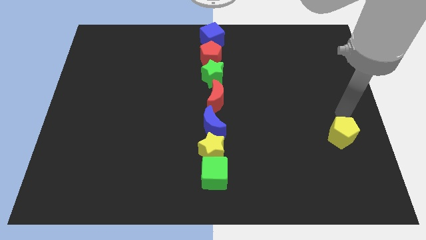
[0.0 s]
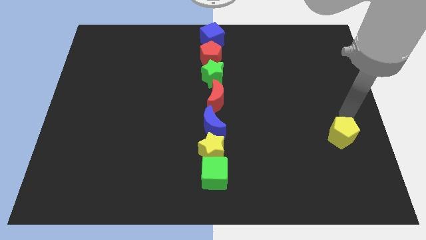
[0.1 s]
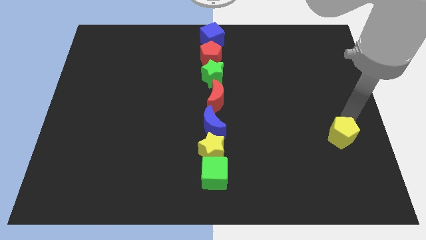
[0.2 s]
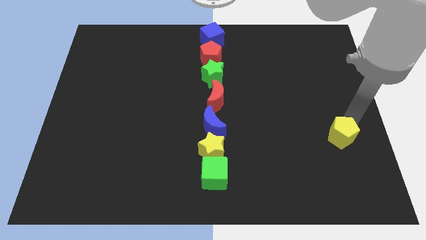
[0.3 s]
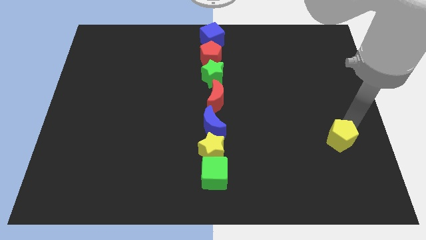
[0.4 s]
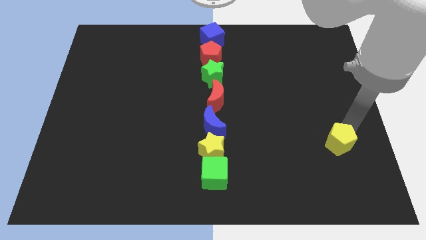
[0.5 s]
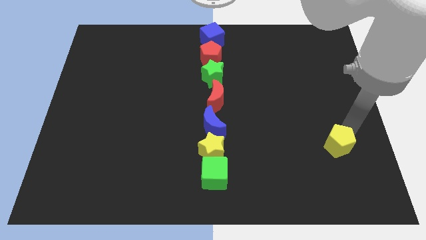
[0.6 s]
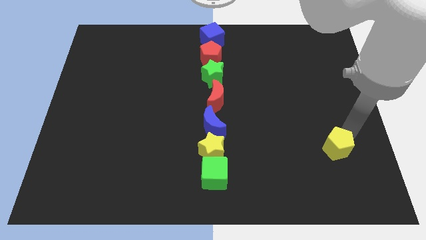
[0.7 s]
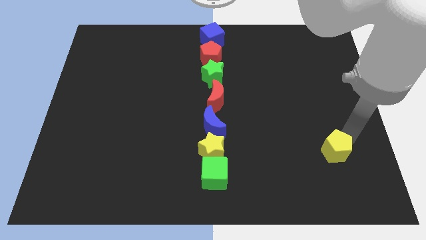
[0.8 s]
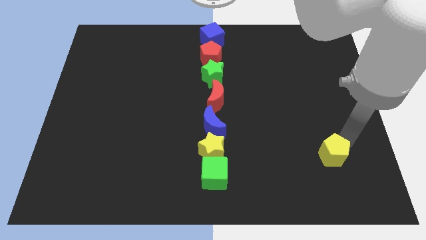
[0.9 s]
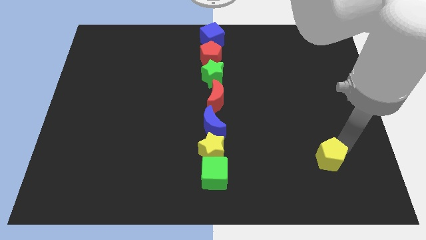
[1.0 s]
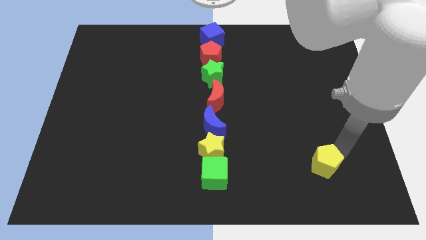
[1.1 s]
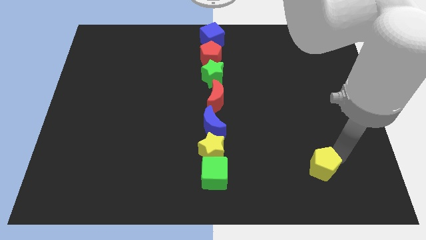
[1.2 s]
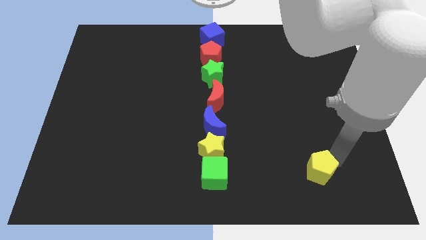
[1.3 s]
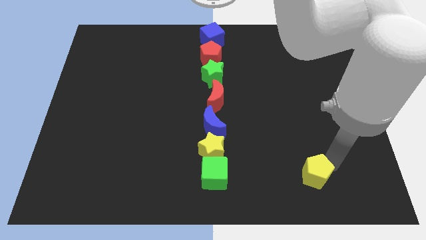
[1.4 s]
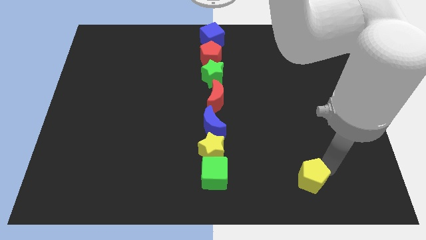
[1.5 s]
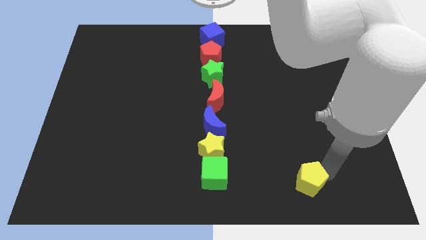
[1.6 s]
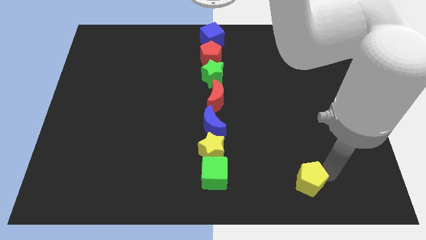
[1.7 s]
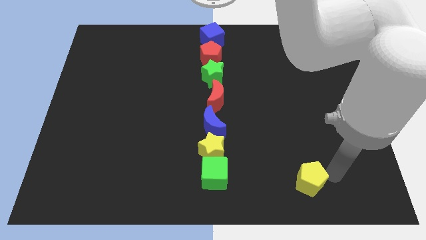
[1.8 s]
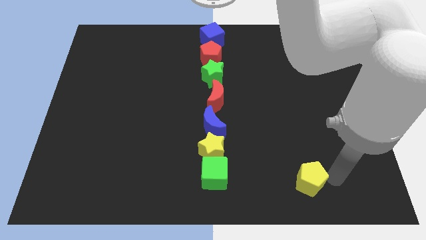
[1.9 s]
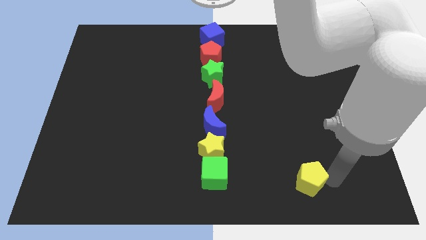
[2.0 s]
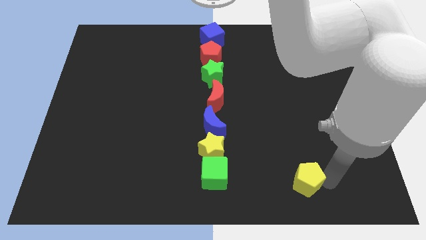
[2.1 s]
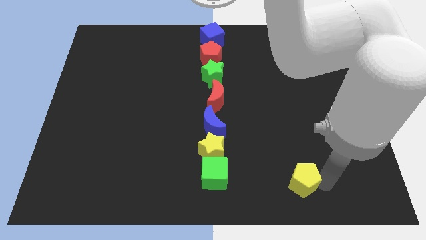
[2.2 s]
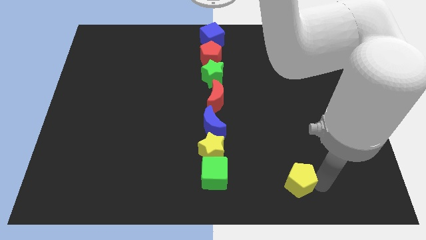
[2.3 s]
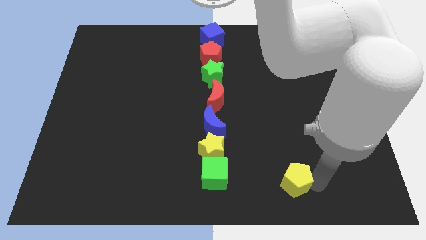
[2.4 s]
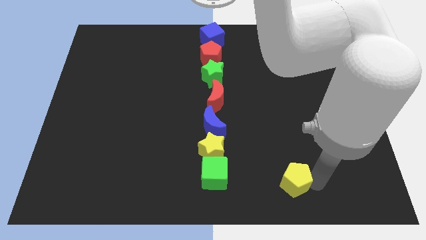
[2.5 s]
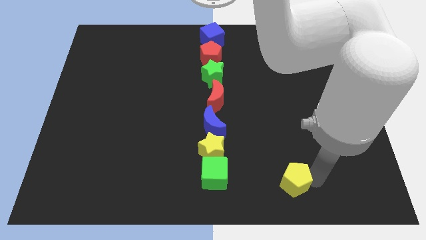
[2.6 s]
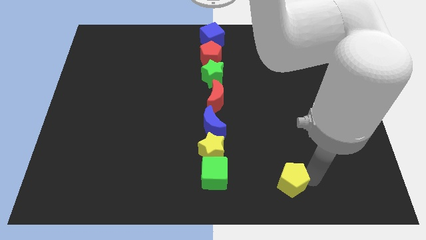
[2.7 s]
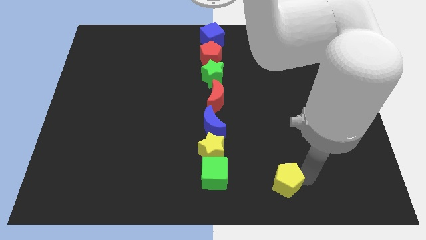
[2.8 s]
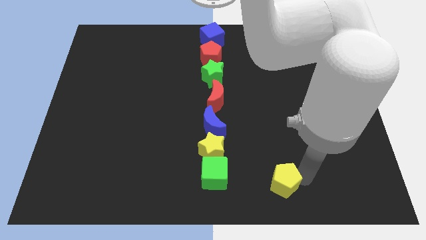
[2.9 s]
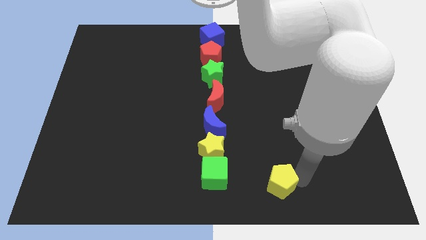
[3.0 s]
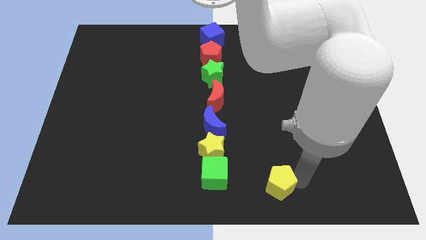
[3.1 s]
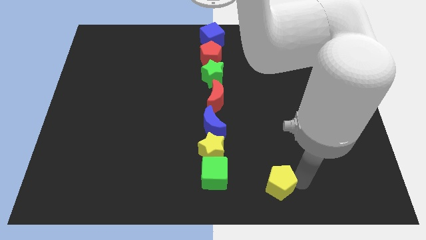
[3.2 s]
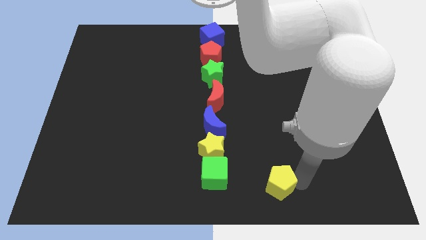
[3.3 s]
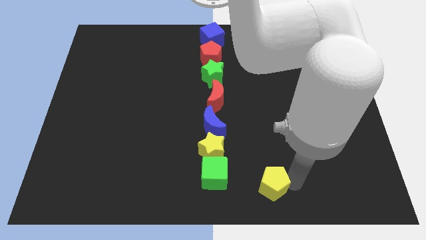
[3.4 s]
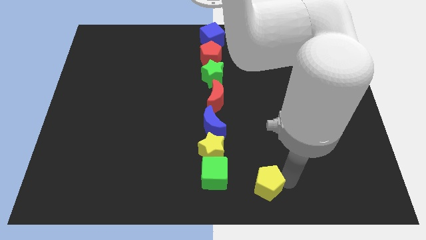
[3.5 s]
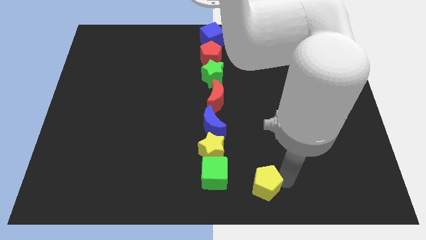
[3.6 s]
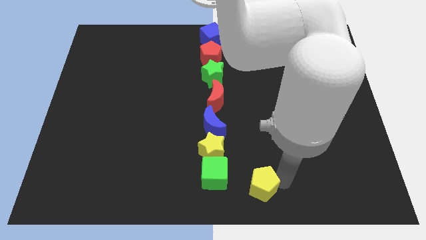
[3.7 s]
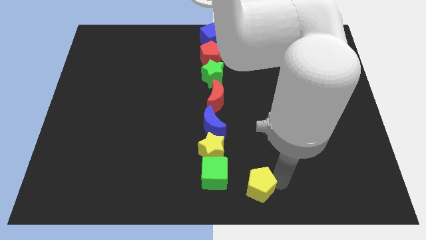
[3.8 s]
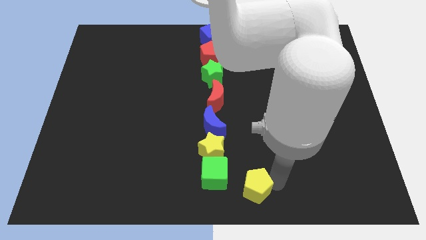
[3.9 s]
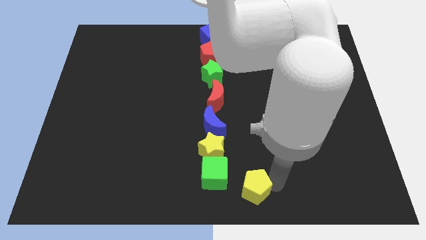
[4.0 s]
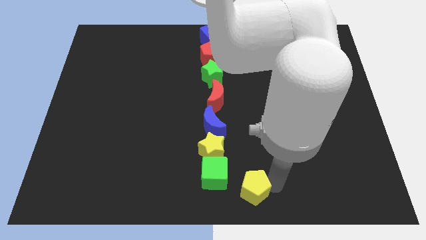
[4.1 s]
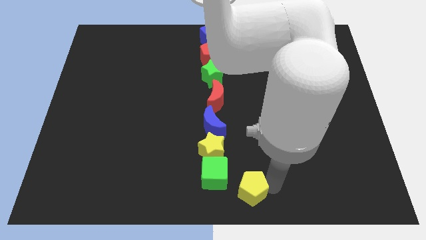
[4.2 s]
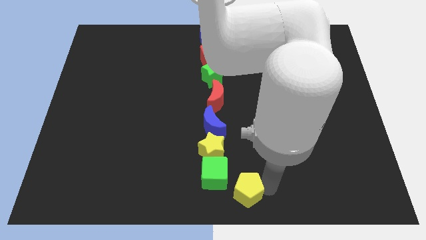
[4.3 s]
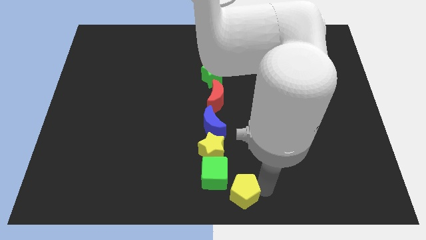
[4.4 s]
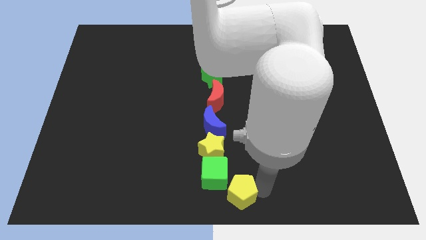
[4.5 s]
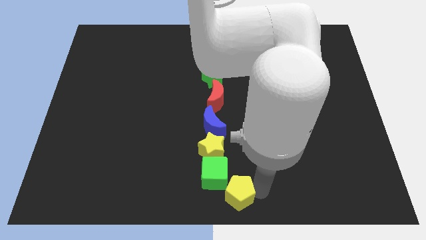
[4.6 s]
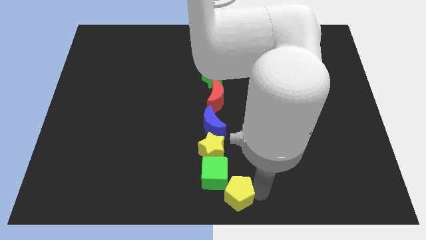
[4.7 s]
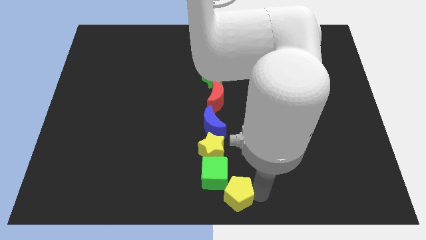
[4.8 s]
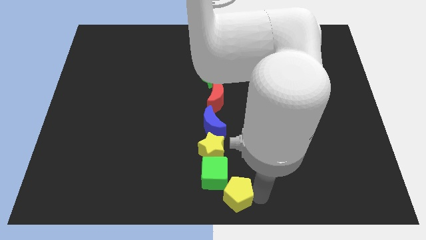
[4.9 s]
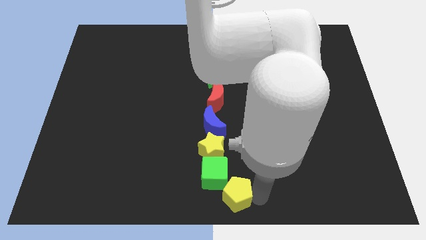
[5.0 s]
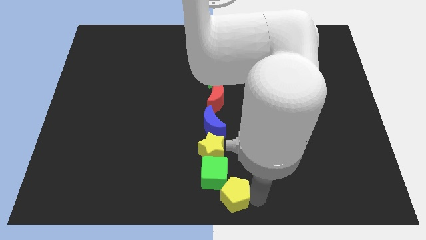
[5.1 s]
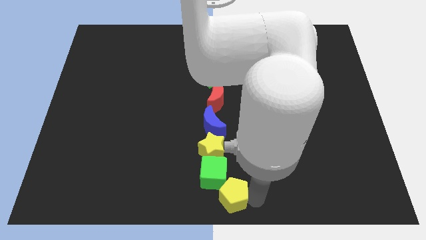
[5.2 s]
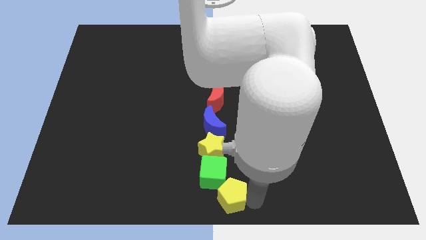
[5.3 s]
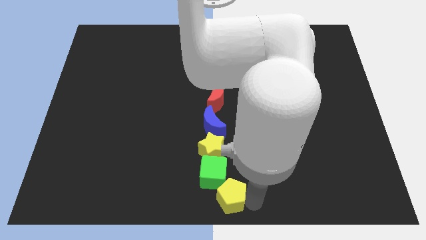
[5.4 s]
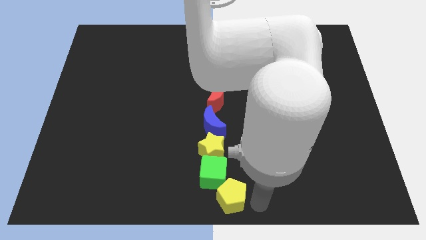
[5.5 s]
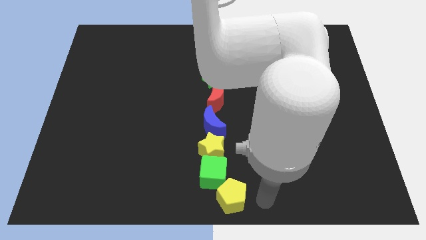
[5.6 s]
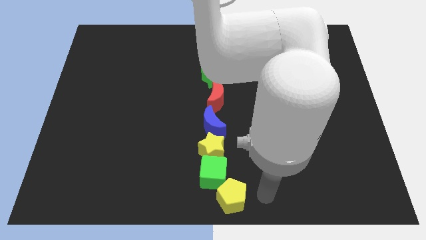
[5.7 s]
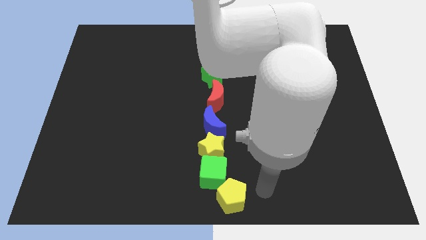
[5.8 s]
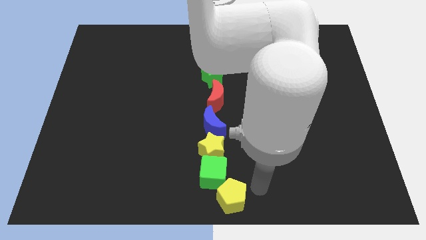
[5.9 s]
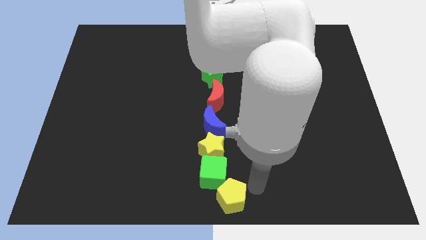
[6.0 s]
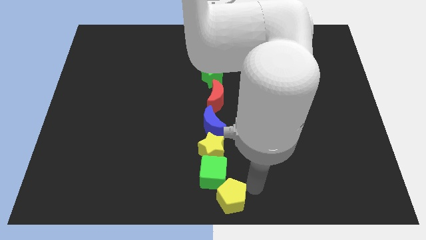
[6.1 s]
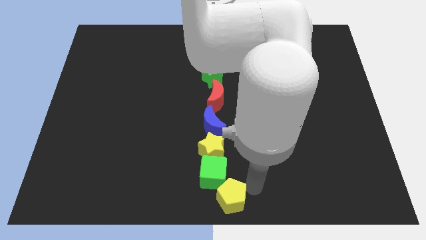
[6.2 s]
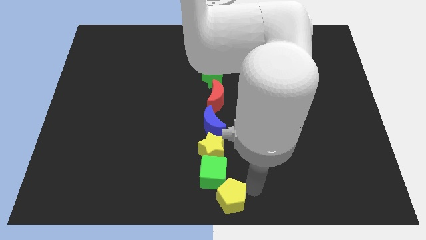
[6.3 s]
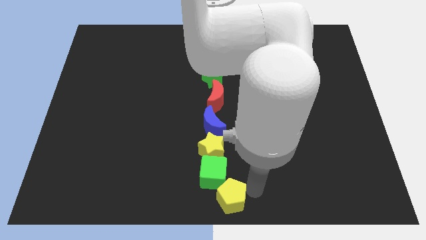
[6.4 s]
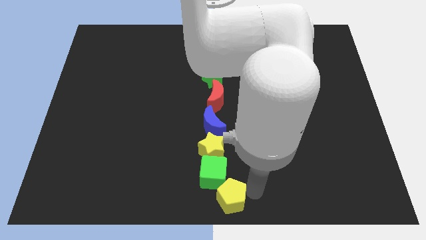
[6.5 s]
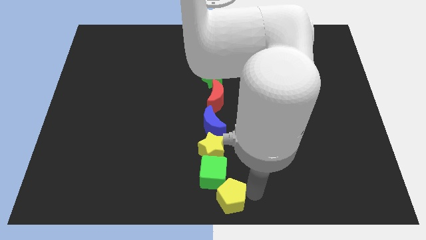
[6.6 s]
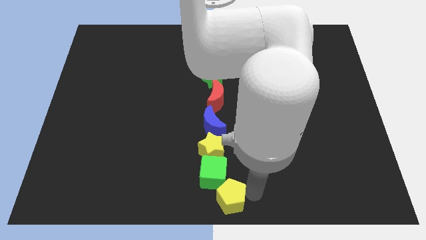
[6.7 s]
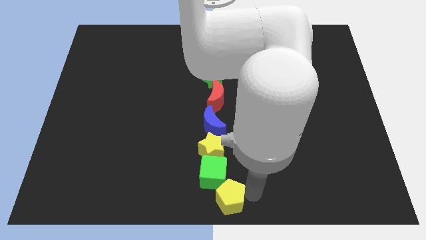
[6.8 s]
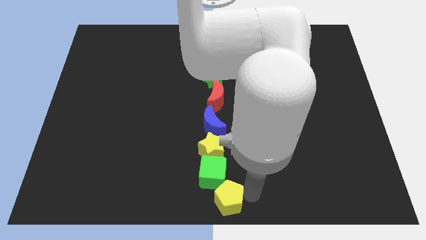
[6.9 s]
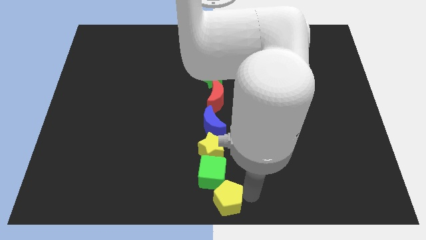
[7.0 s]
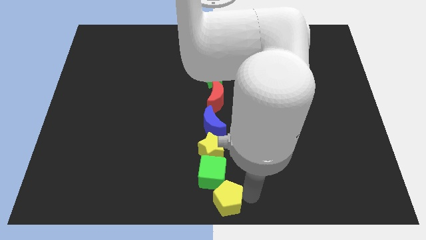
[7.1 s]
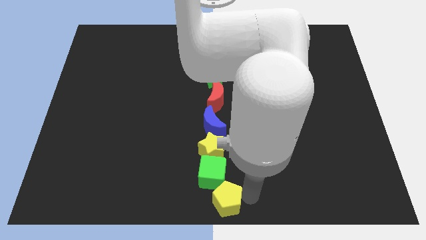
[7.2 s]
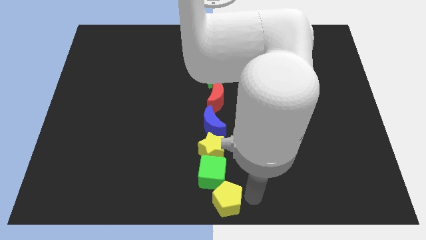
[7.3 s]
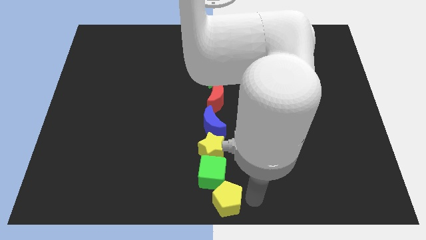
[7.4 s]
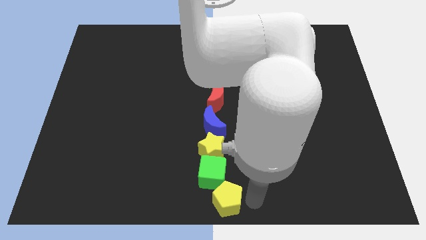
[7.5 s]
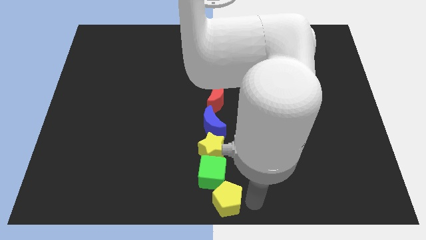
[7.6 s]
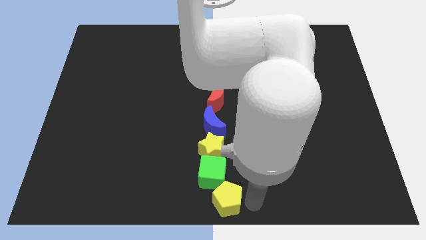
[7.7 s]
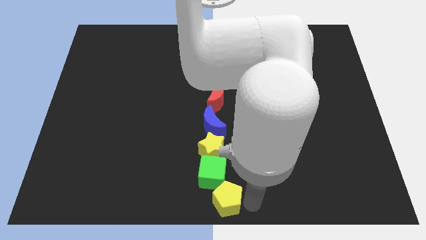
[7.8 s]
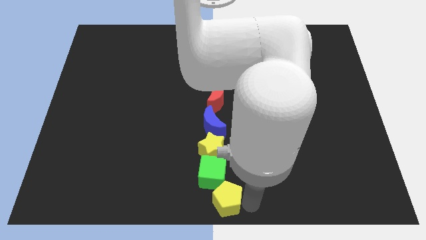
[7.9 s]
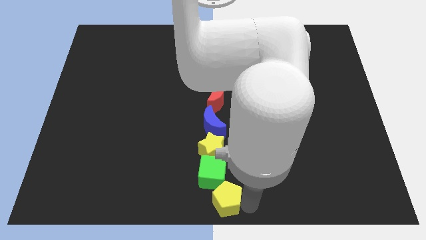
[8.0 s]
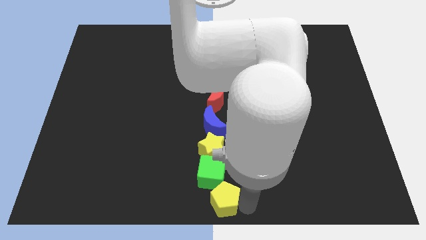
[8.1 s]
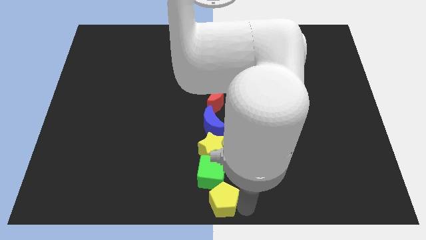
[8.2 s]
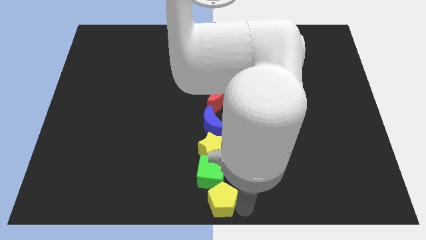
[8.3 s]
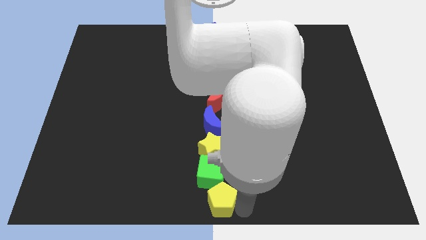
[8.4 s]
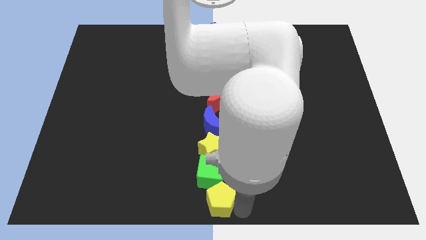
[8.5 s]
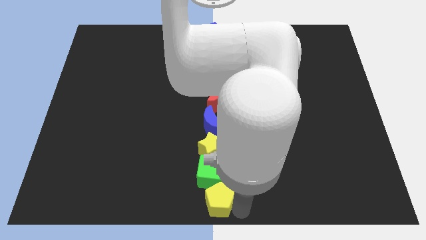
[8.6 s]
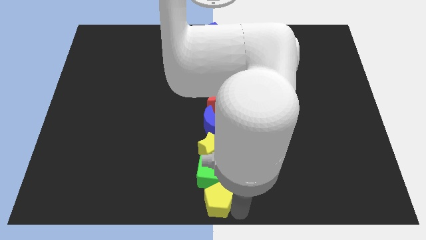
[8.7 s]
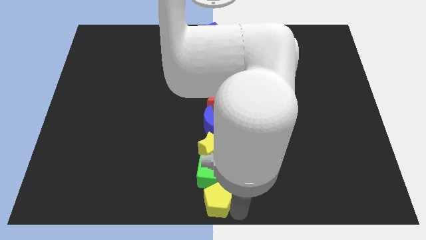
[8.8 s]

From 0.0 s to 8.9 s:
push the yellow pentagon below the green cube
